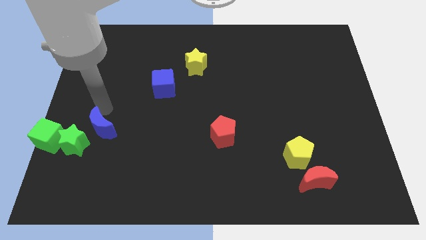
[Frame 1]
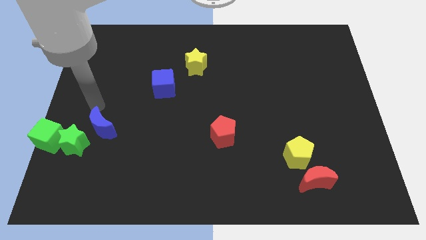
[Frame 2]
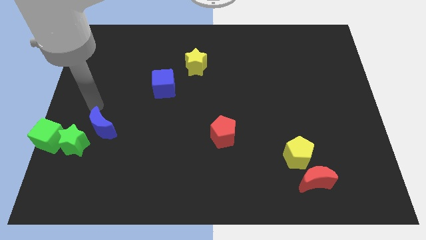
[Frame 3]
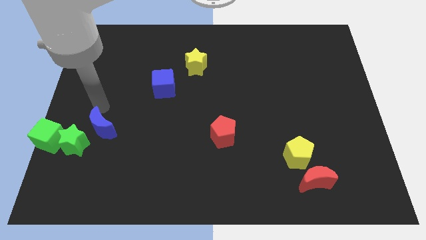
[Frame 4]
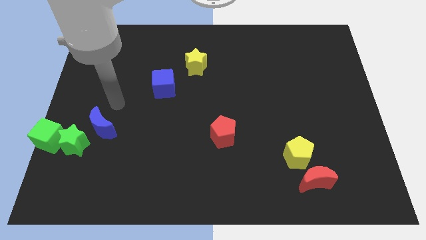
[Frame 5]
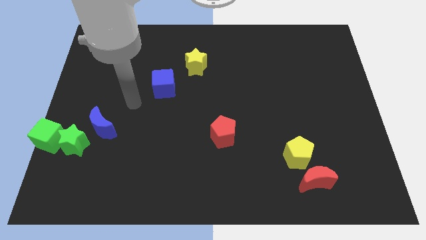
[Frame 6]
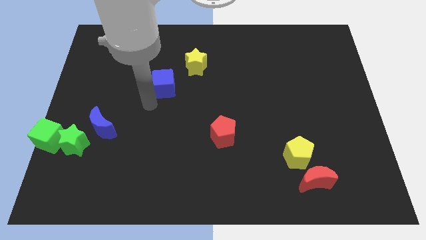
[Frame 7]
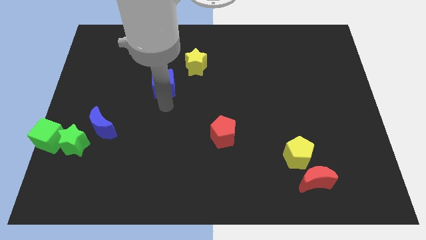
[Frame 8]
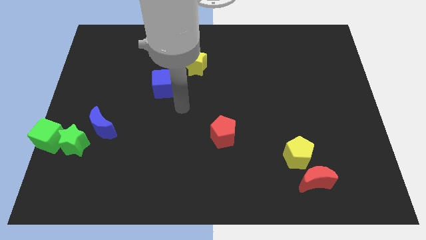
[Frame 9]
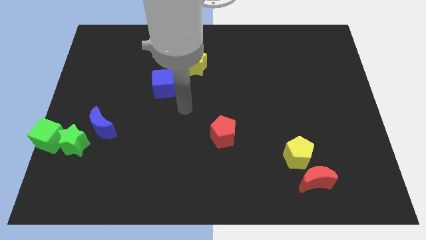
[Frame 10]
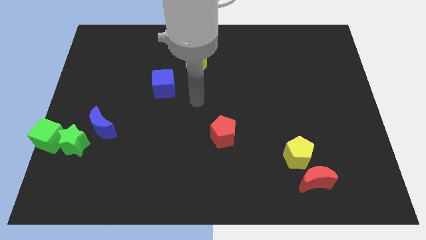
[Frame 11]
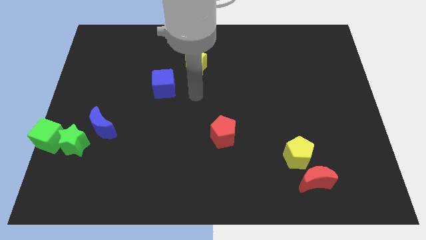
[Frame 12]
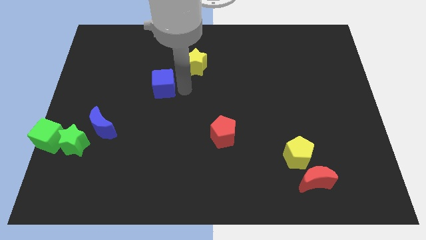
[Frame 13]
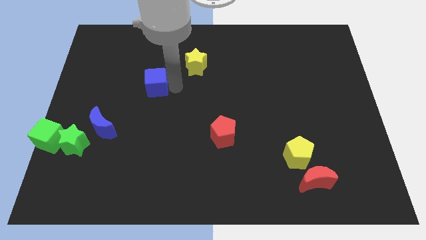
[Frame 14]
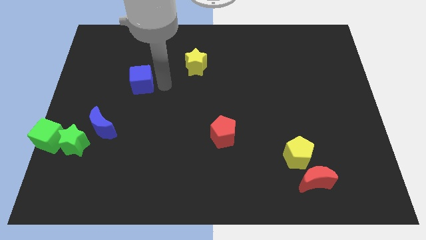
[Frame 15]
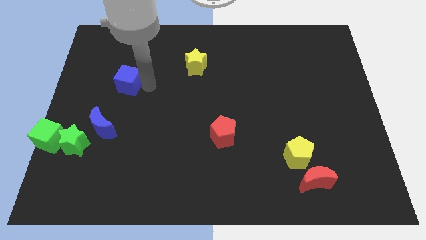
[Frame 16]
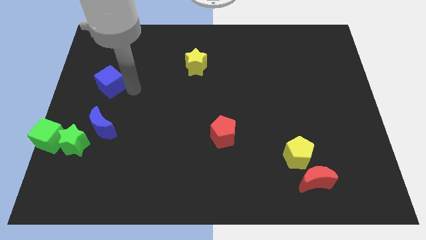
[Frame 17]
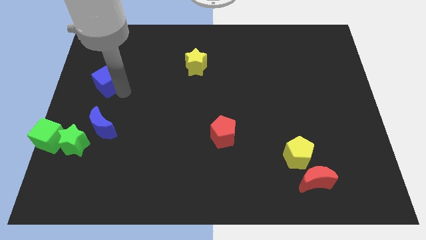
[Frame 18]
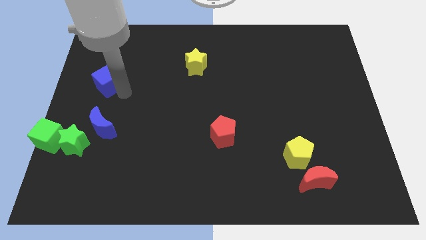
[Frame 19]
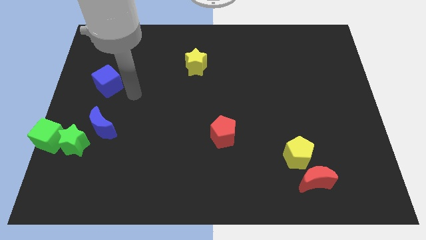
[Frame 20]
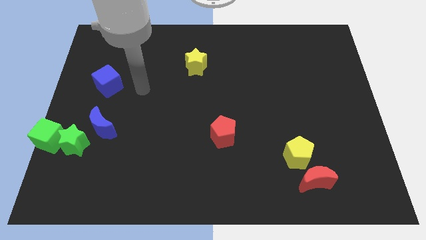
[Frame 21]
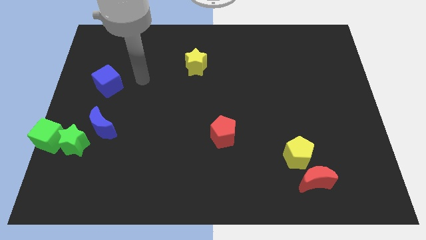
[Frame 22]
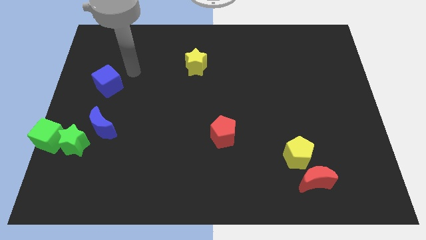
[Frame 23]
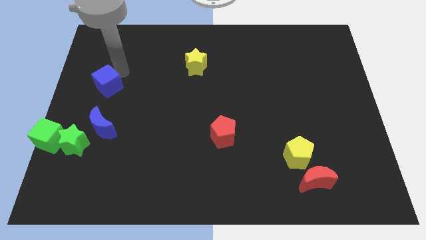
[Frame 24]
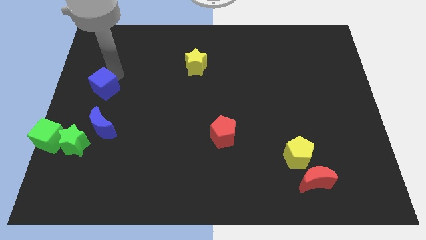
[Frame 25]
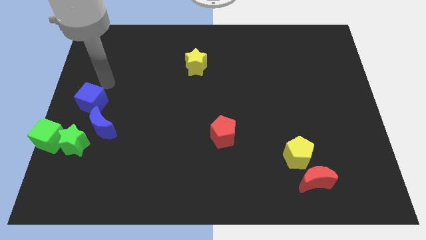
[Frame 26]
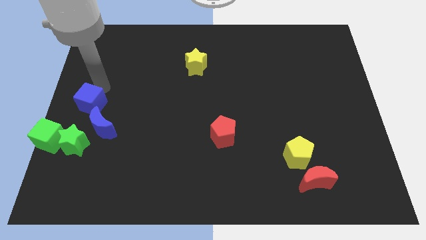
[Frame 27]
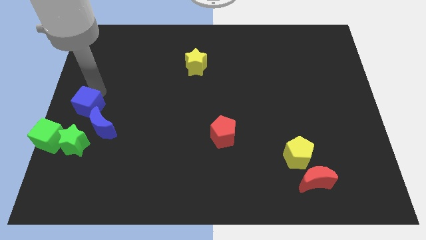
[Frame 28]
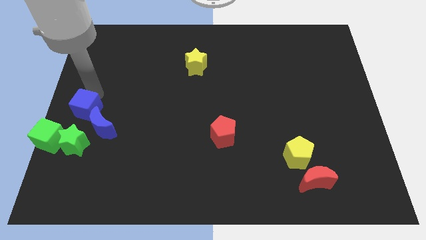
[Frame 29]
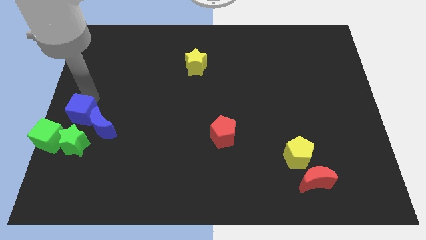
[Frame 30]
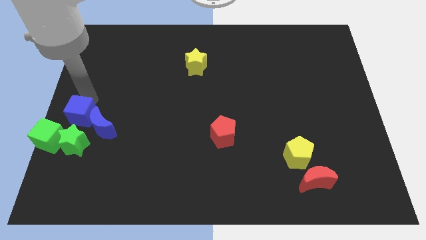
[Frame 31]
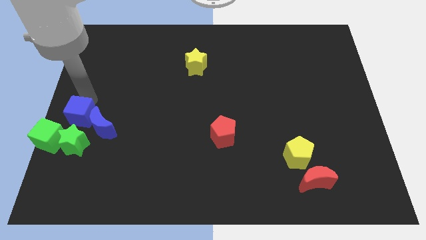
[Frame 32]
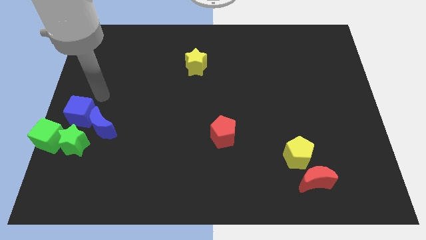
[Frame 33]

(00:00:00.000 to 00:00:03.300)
place blue cube to the top of green star

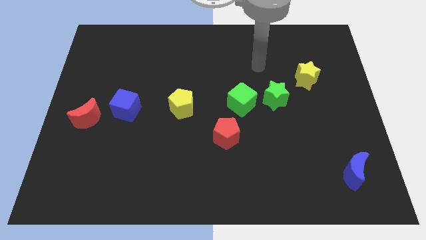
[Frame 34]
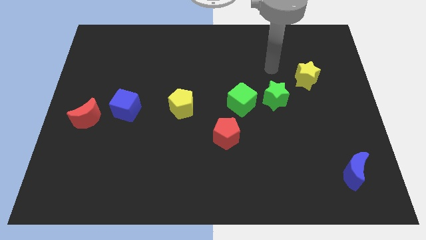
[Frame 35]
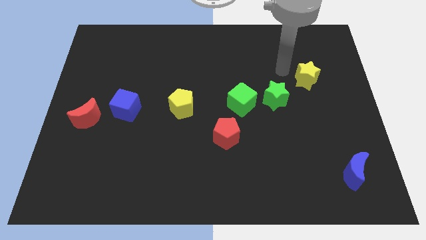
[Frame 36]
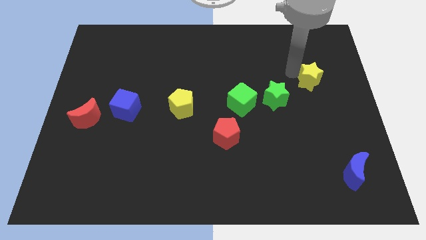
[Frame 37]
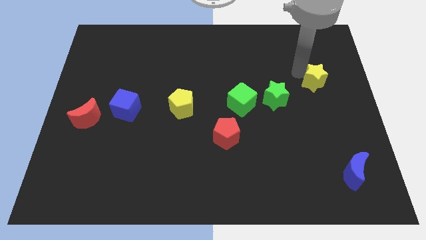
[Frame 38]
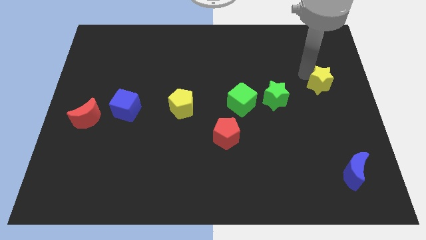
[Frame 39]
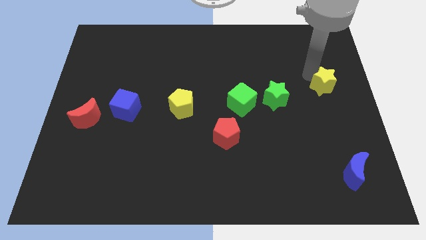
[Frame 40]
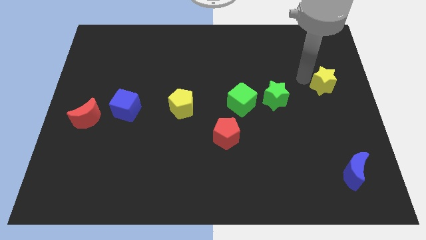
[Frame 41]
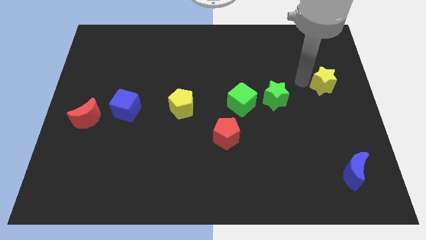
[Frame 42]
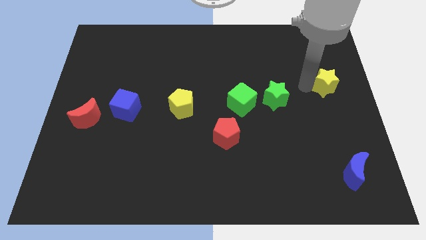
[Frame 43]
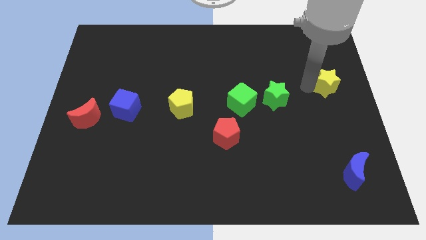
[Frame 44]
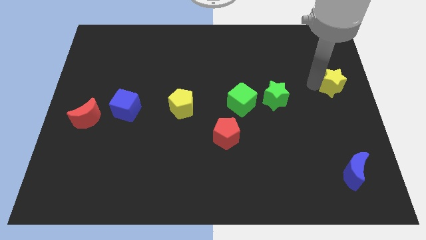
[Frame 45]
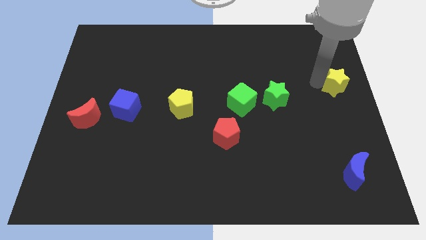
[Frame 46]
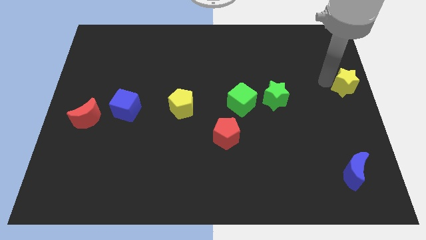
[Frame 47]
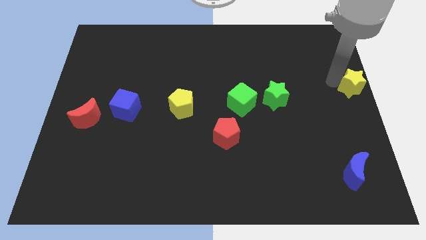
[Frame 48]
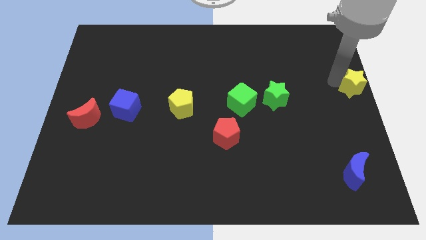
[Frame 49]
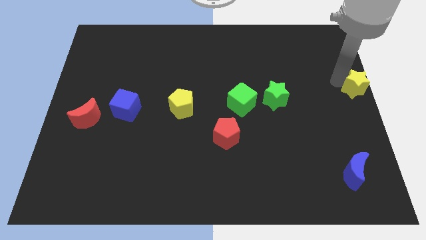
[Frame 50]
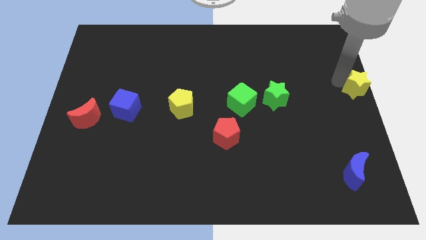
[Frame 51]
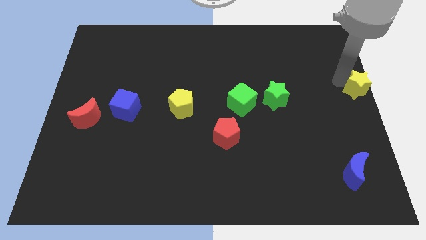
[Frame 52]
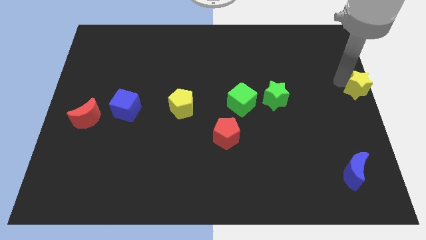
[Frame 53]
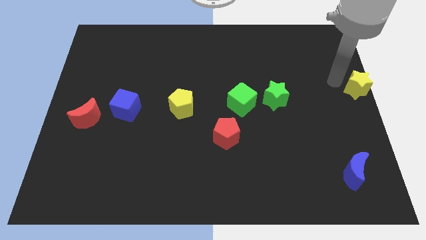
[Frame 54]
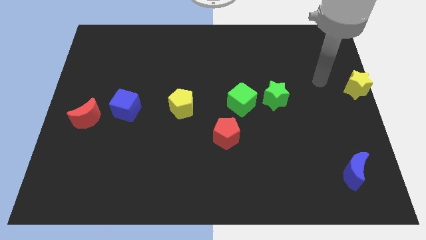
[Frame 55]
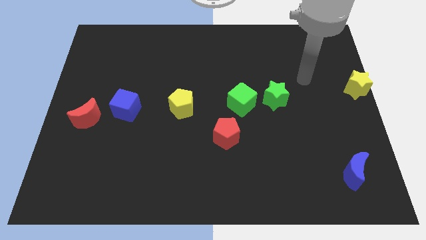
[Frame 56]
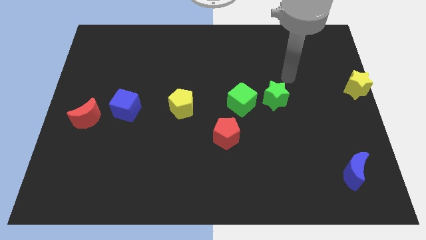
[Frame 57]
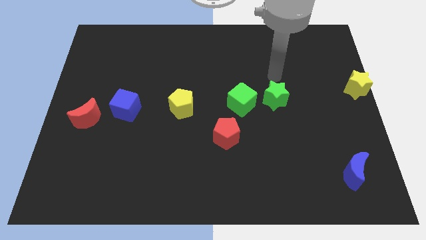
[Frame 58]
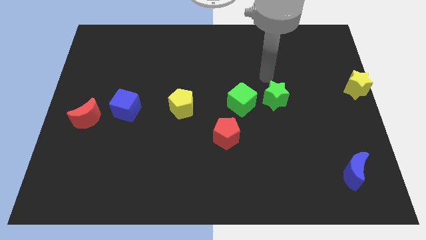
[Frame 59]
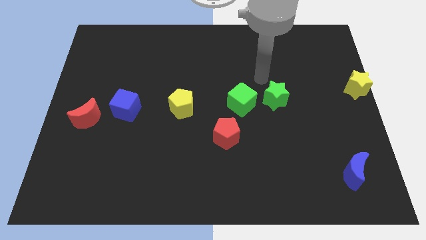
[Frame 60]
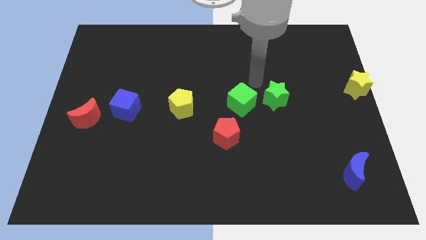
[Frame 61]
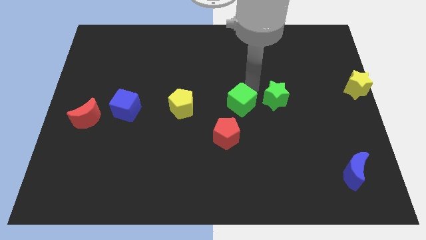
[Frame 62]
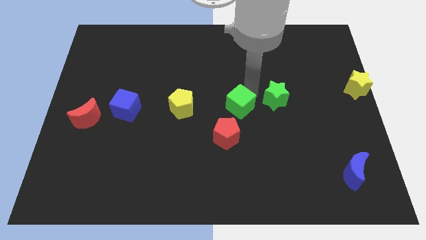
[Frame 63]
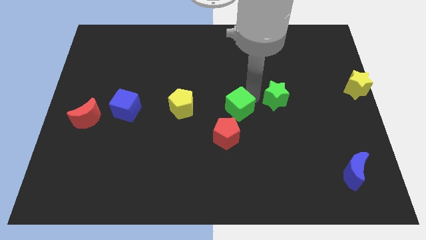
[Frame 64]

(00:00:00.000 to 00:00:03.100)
move the yellow star to the right center of the board

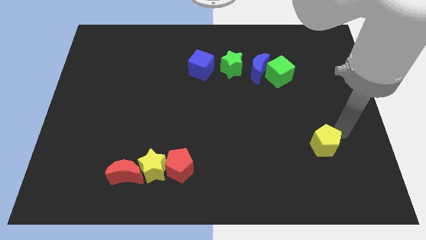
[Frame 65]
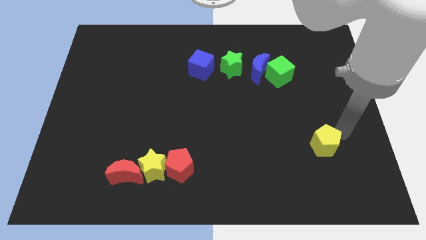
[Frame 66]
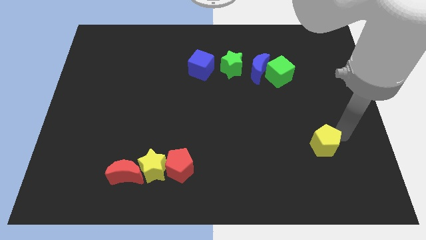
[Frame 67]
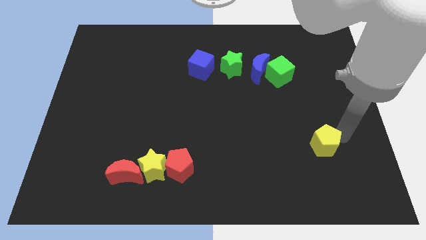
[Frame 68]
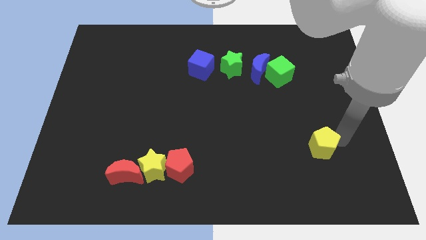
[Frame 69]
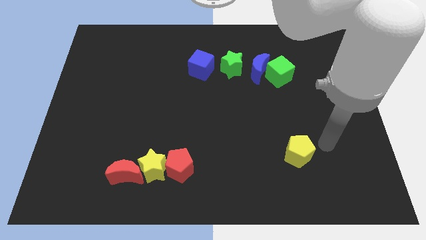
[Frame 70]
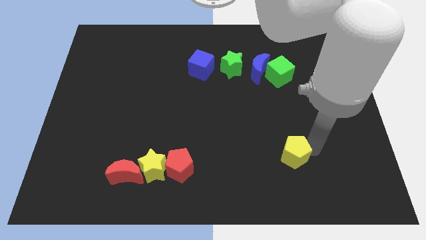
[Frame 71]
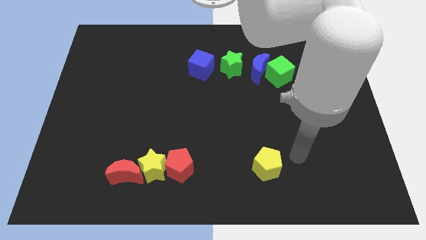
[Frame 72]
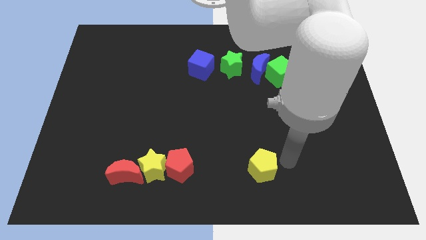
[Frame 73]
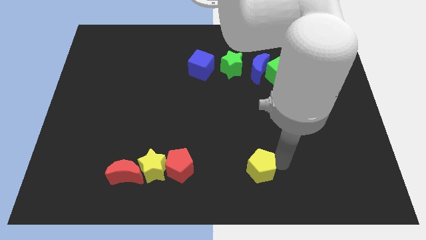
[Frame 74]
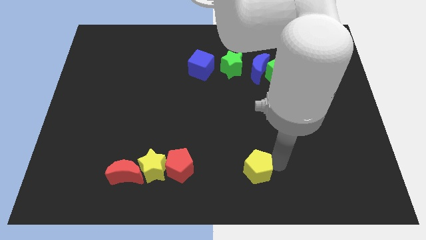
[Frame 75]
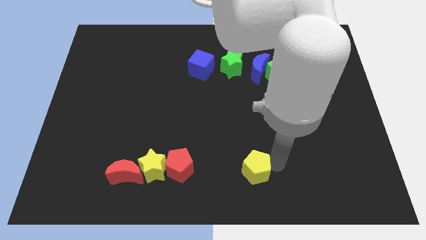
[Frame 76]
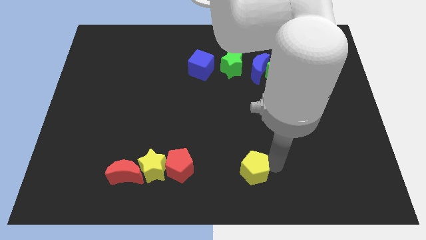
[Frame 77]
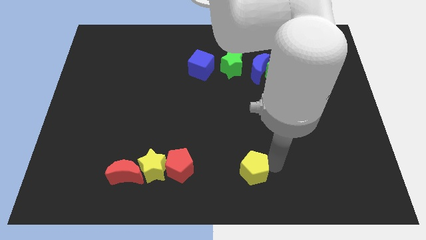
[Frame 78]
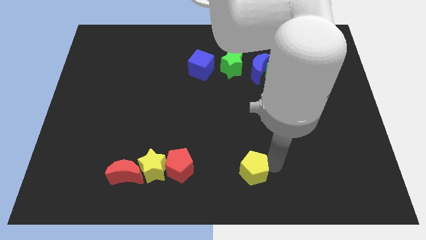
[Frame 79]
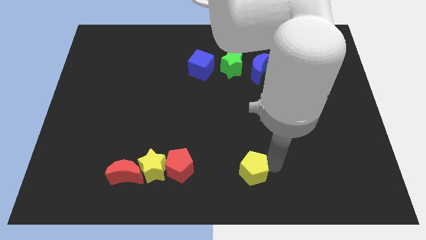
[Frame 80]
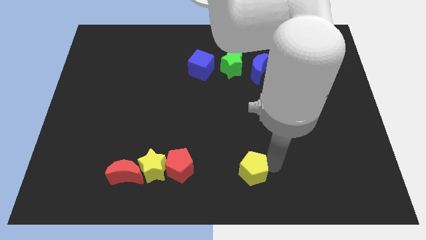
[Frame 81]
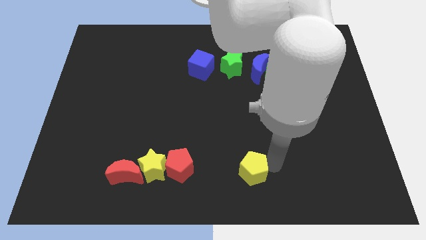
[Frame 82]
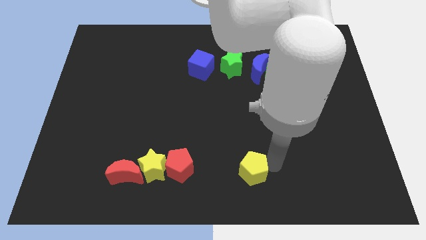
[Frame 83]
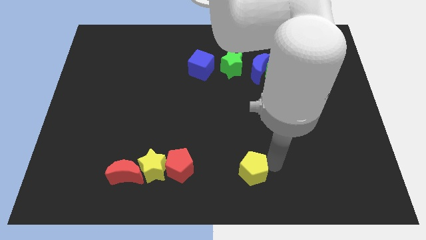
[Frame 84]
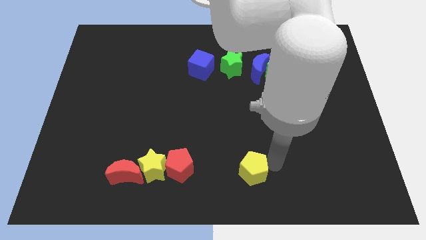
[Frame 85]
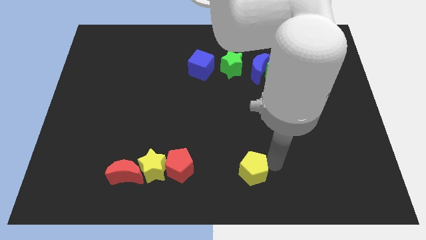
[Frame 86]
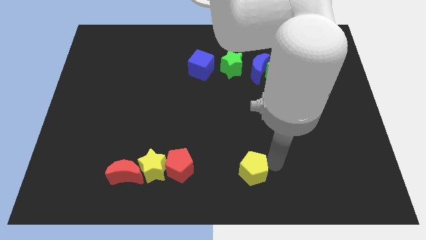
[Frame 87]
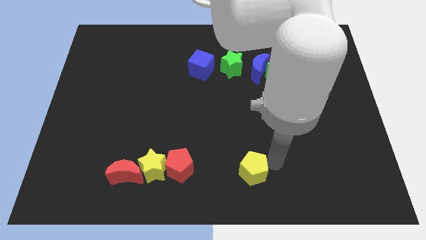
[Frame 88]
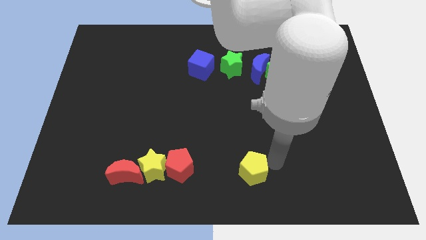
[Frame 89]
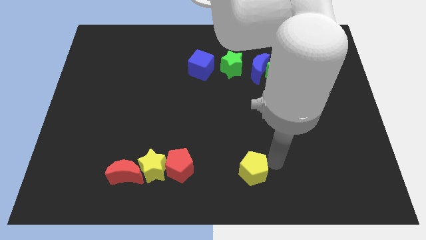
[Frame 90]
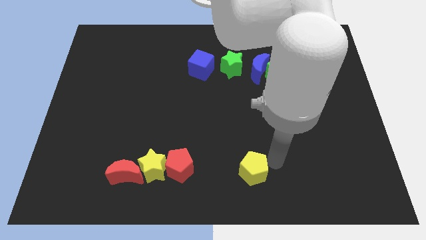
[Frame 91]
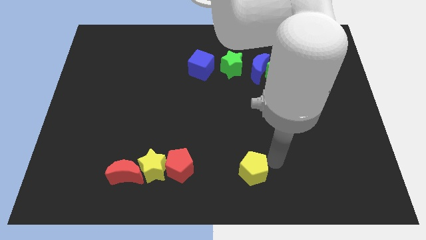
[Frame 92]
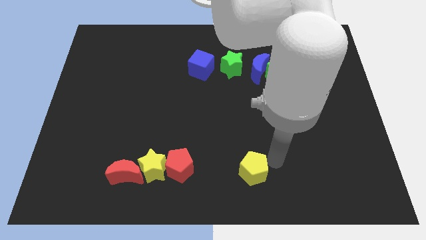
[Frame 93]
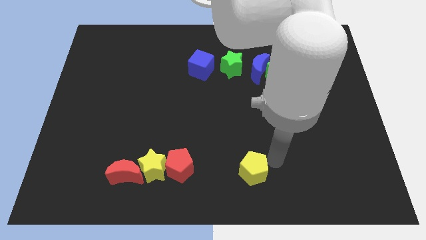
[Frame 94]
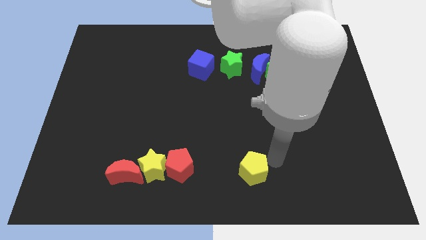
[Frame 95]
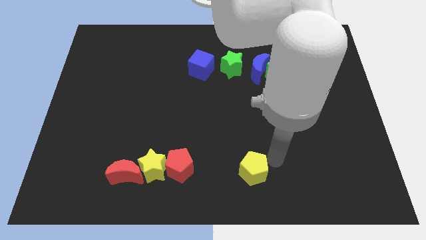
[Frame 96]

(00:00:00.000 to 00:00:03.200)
place the yellow pentagon horizontally to the right side of the red pentagon
